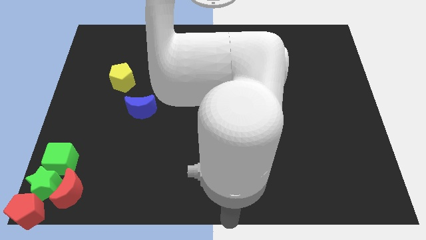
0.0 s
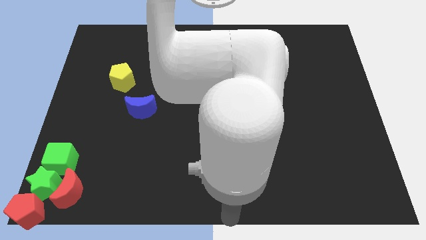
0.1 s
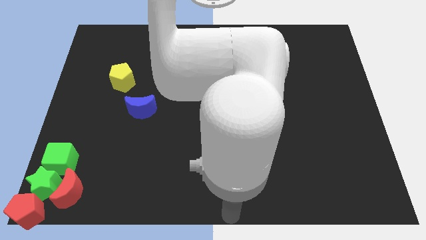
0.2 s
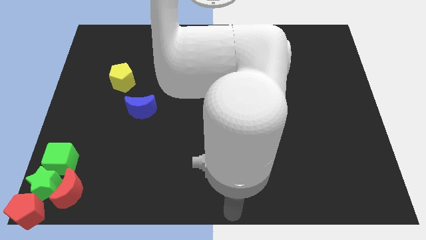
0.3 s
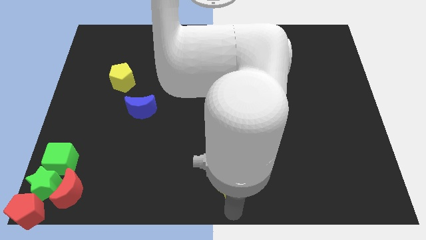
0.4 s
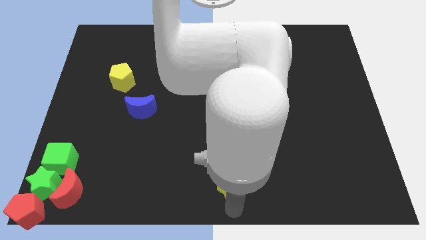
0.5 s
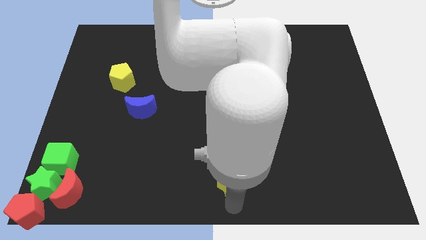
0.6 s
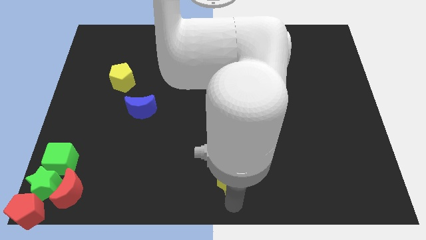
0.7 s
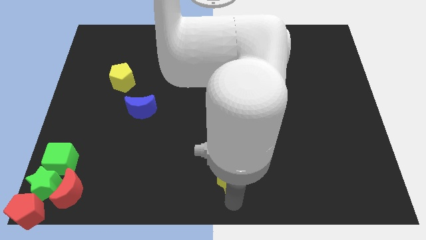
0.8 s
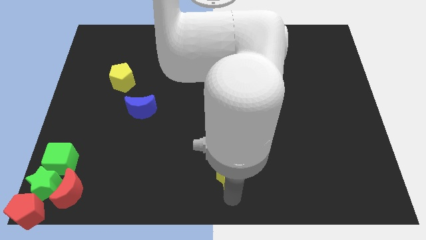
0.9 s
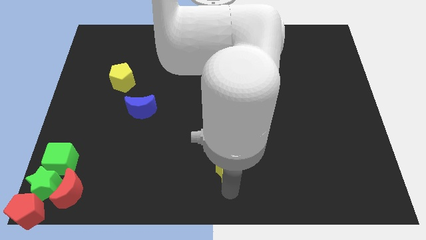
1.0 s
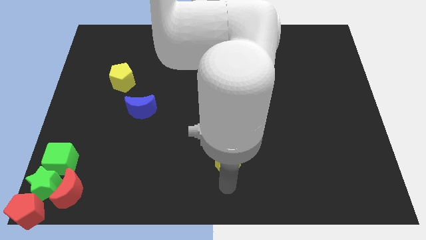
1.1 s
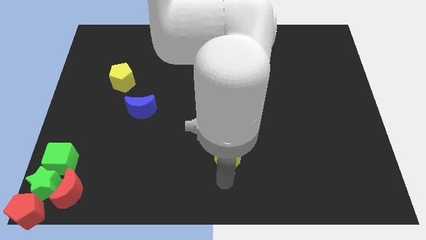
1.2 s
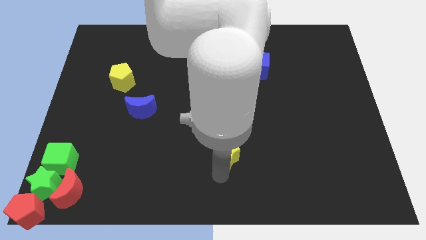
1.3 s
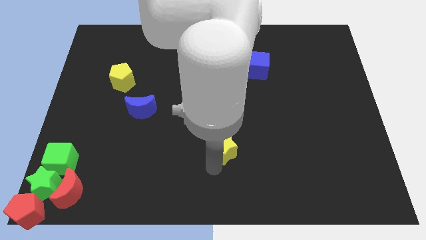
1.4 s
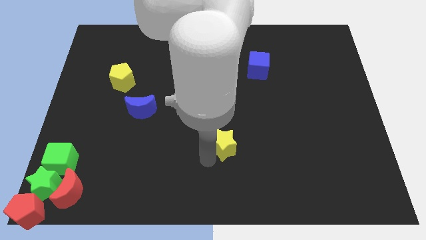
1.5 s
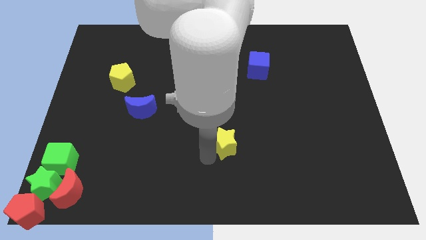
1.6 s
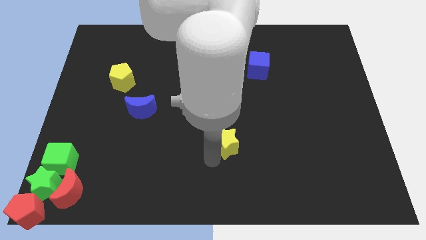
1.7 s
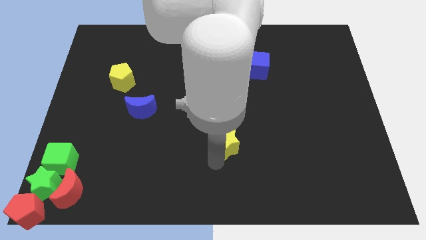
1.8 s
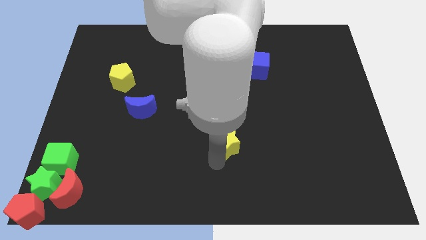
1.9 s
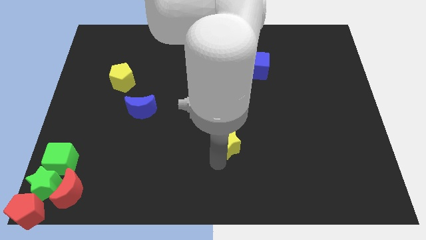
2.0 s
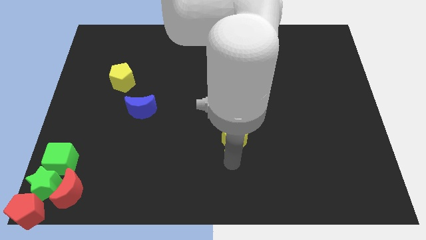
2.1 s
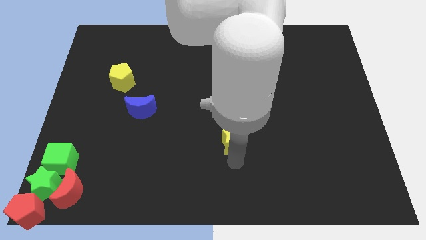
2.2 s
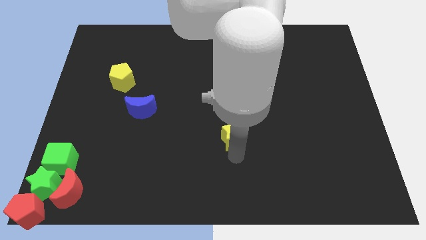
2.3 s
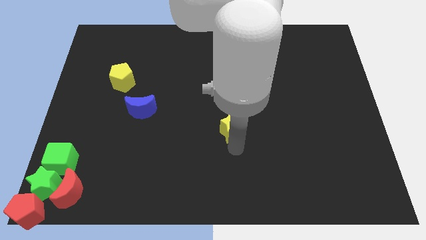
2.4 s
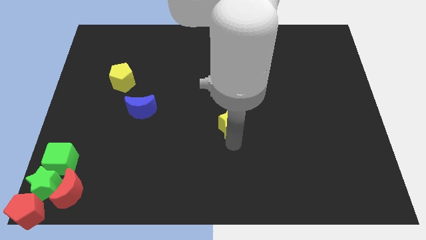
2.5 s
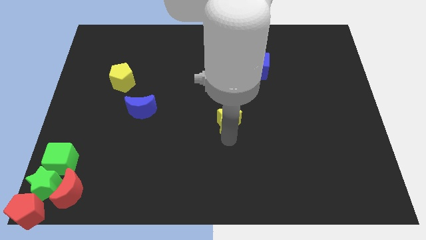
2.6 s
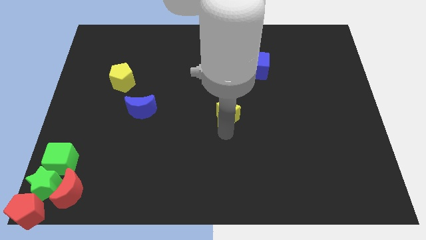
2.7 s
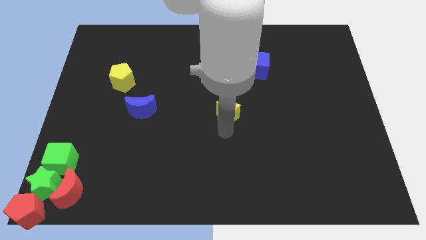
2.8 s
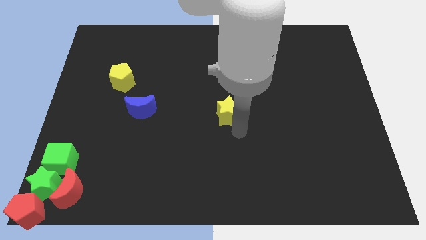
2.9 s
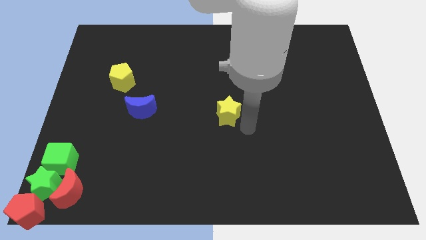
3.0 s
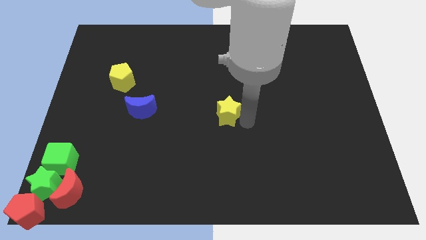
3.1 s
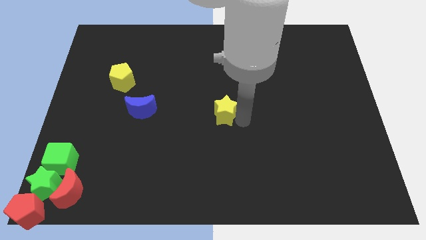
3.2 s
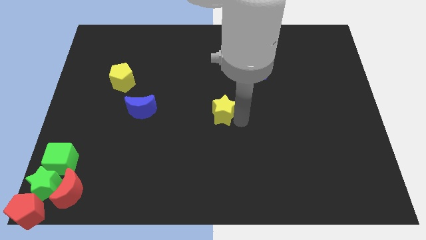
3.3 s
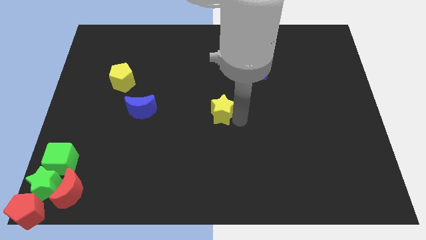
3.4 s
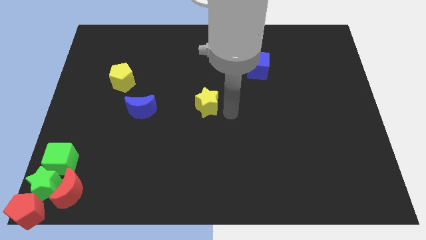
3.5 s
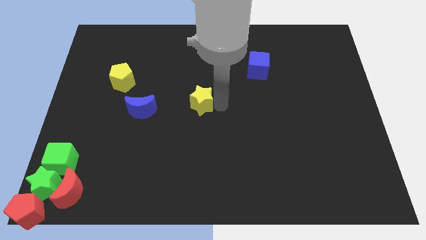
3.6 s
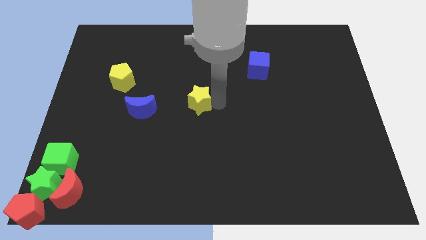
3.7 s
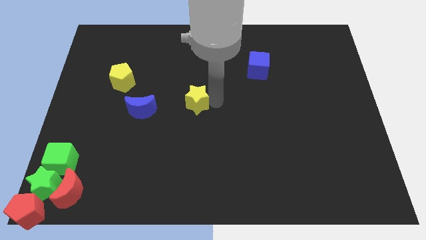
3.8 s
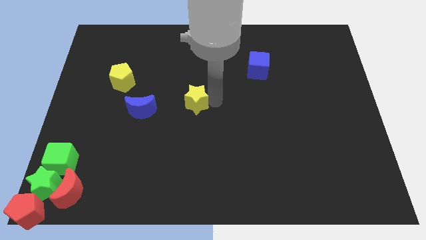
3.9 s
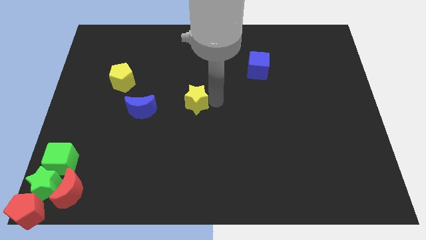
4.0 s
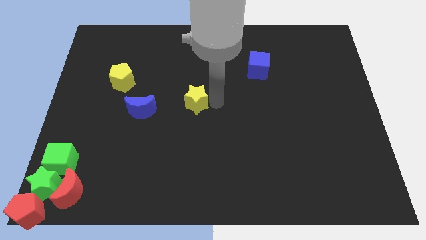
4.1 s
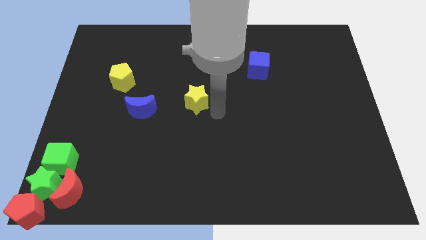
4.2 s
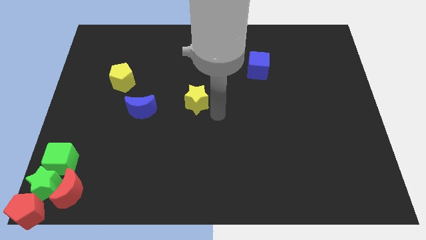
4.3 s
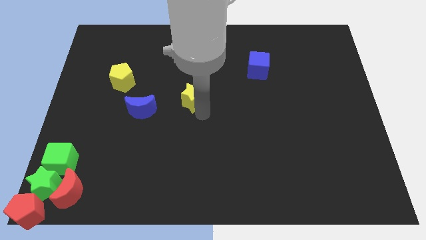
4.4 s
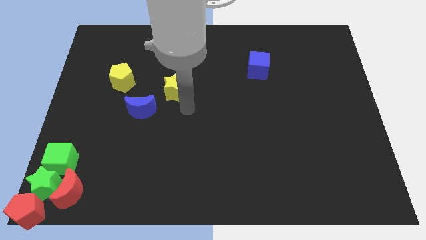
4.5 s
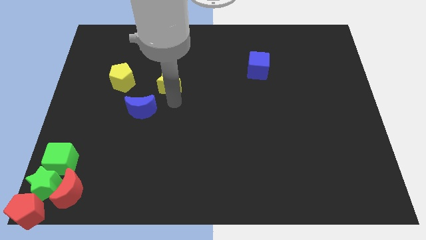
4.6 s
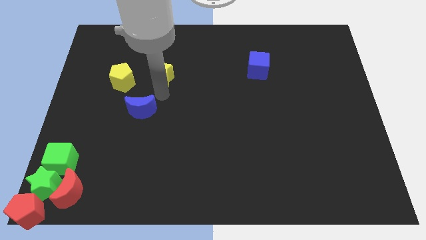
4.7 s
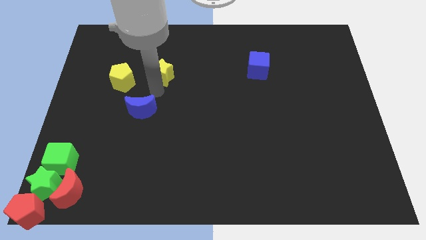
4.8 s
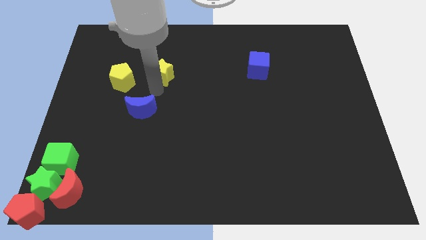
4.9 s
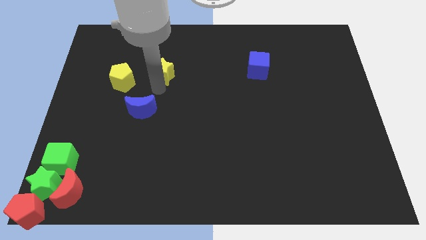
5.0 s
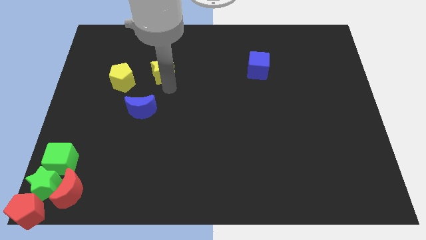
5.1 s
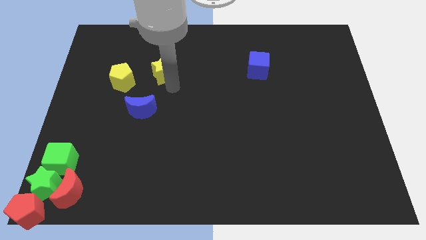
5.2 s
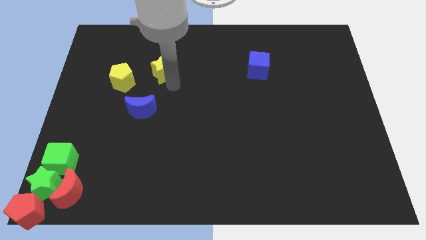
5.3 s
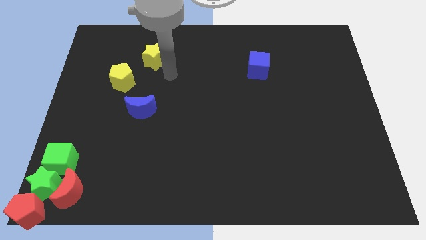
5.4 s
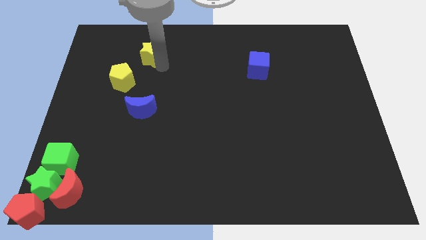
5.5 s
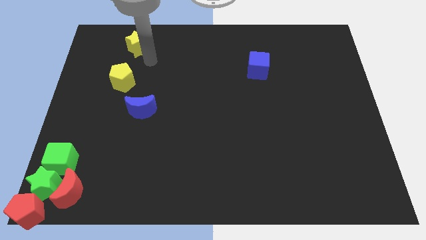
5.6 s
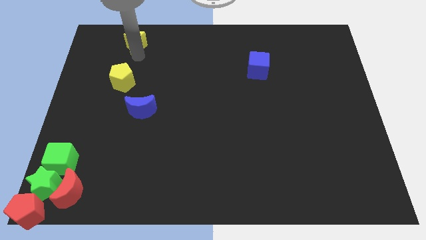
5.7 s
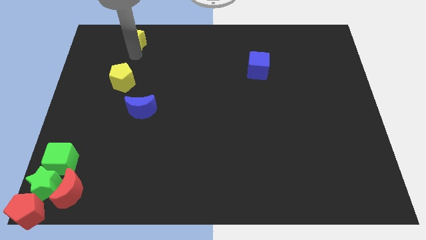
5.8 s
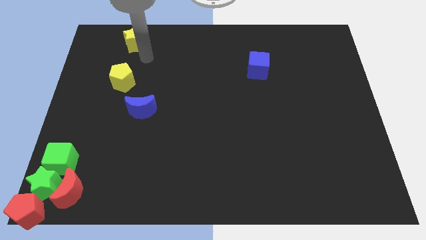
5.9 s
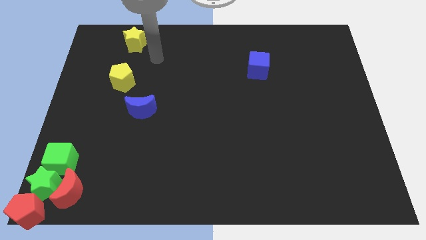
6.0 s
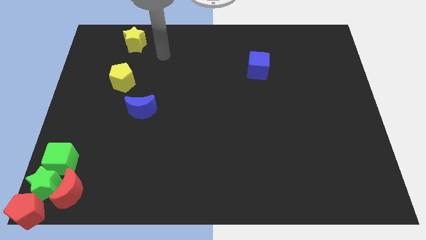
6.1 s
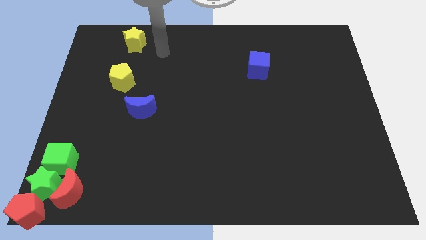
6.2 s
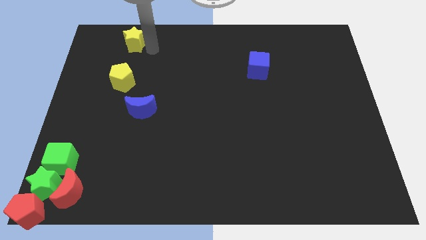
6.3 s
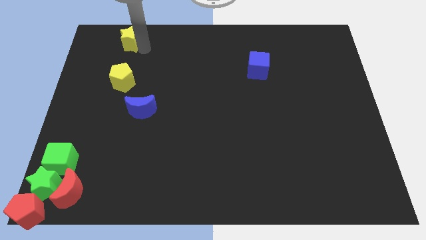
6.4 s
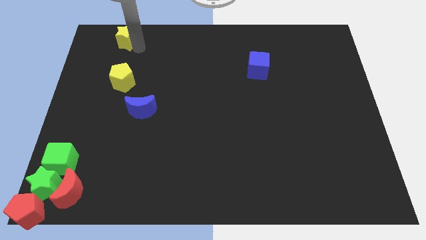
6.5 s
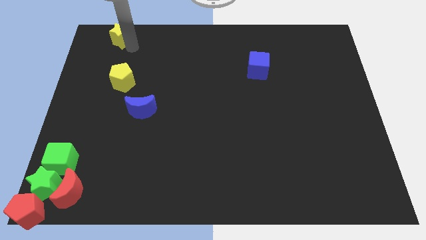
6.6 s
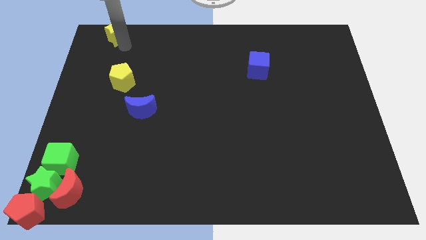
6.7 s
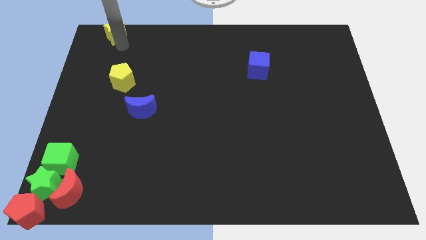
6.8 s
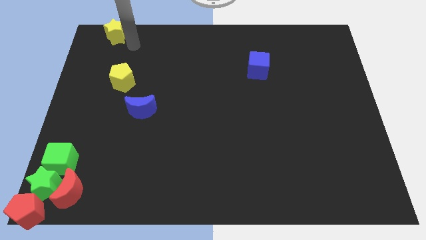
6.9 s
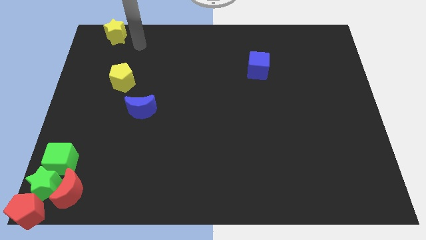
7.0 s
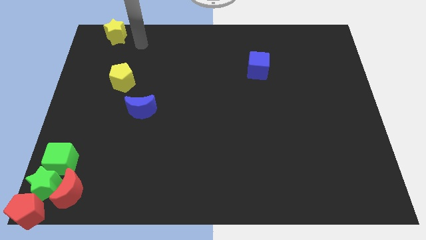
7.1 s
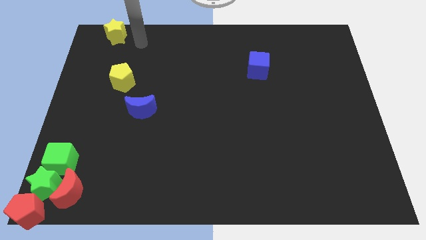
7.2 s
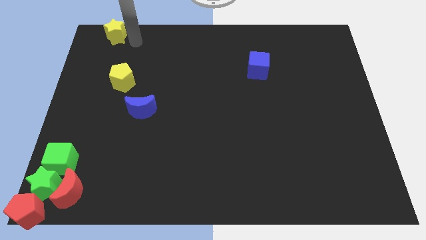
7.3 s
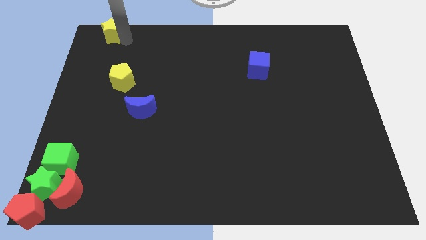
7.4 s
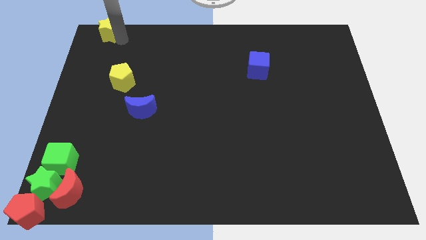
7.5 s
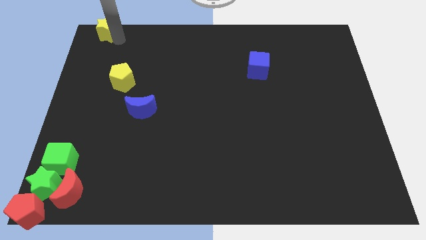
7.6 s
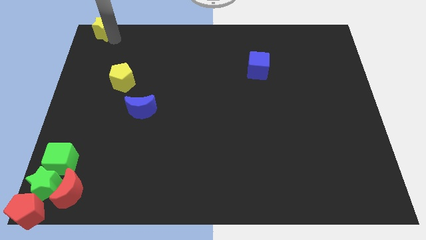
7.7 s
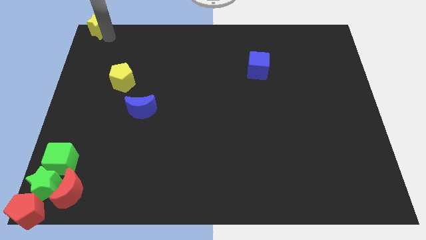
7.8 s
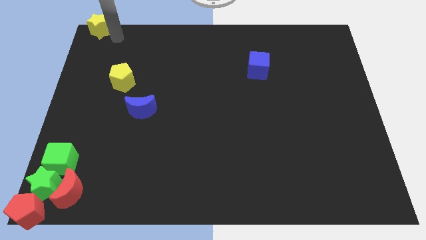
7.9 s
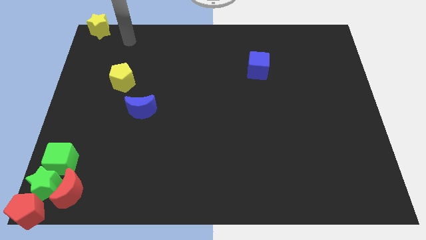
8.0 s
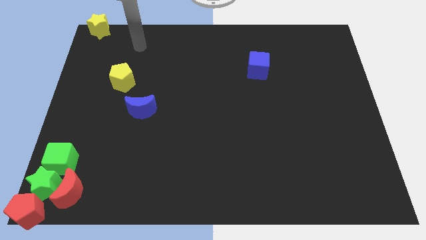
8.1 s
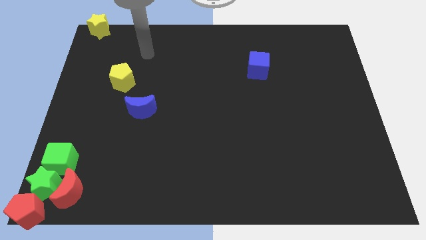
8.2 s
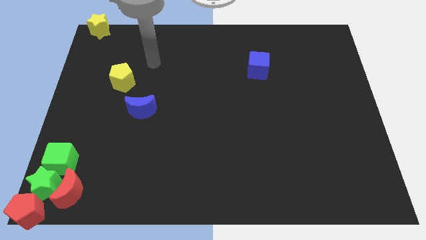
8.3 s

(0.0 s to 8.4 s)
push the yellow star to the top left corner of the board

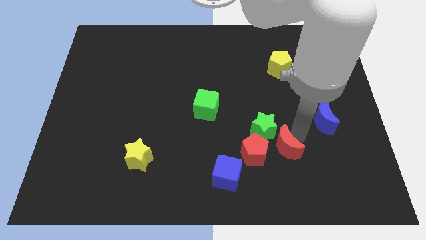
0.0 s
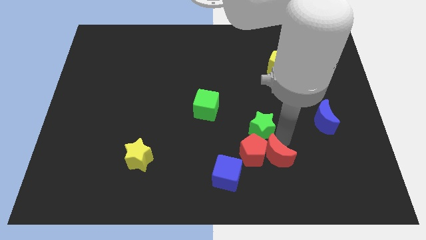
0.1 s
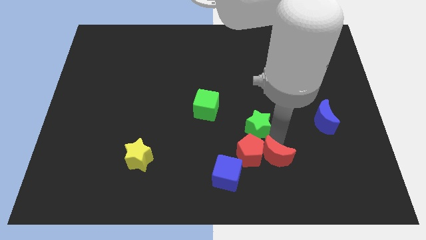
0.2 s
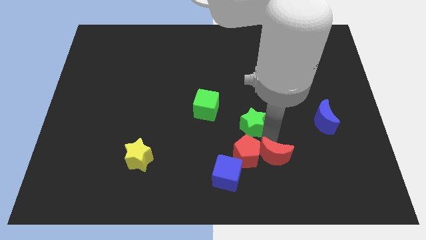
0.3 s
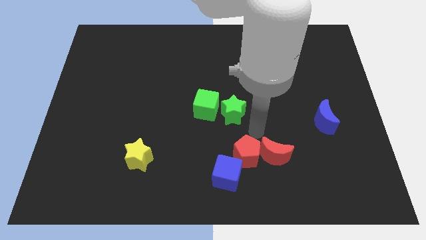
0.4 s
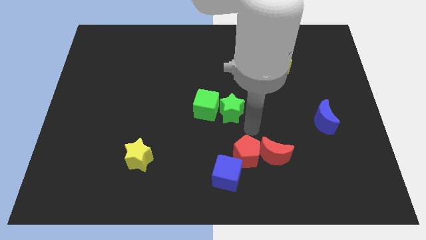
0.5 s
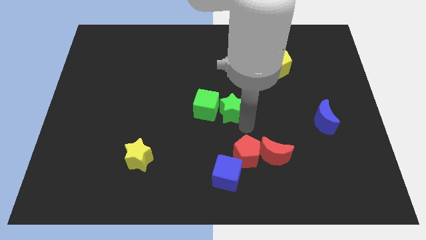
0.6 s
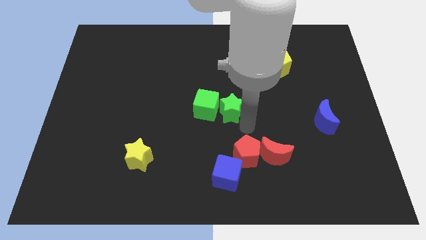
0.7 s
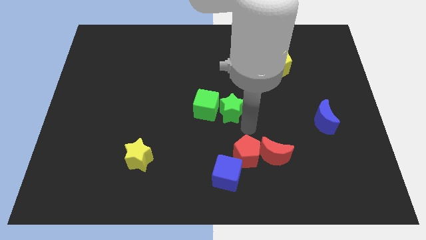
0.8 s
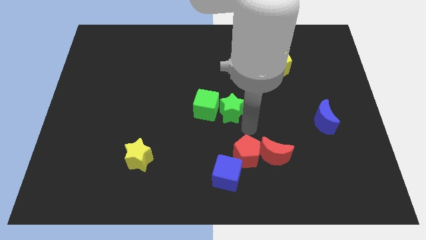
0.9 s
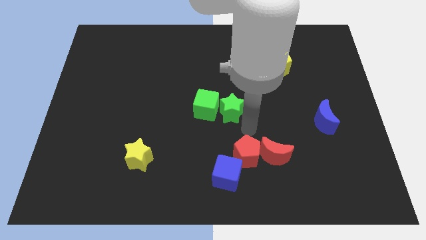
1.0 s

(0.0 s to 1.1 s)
put the green star into green cube
